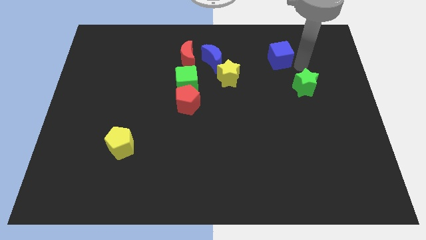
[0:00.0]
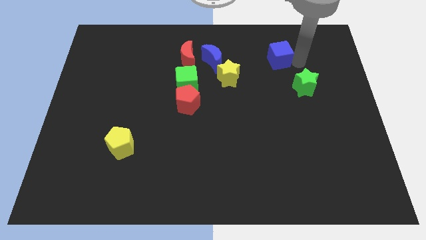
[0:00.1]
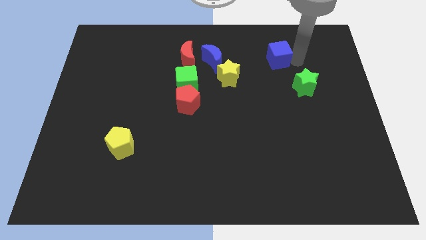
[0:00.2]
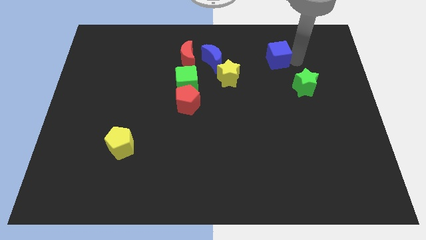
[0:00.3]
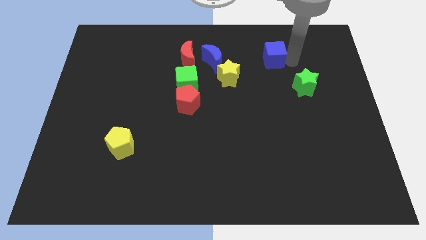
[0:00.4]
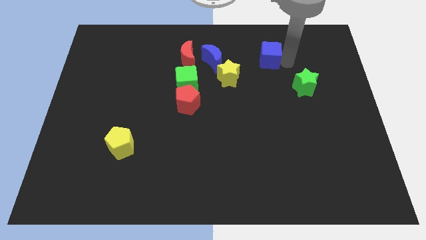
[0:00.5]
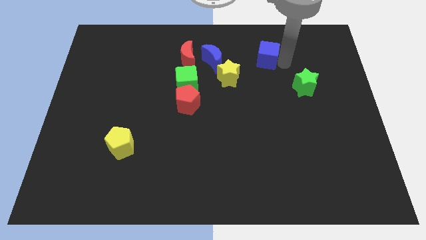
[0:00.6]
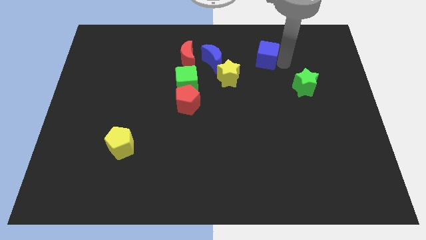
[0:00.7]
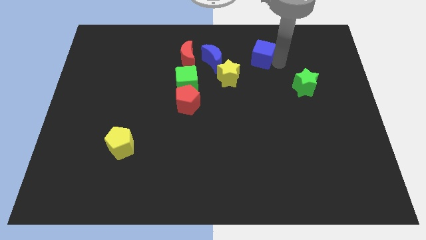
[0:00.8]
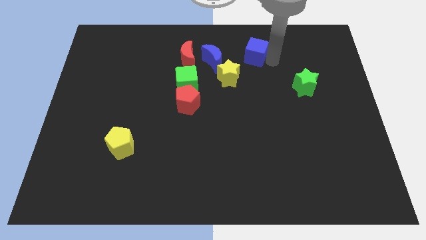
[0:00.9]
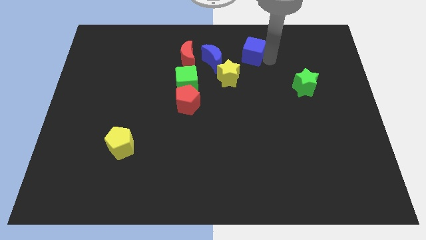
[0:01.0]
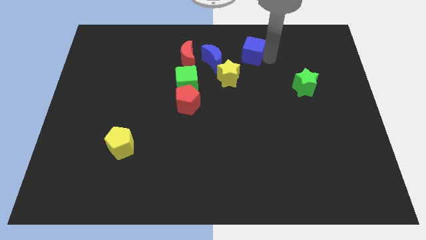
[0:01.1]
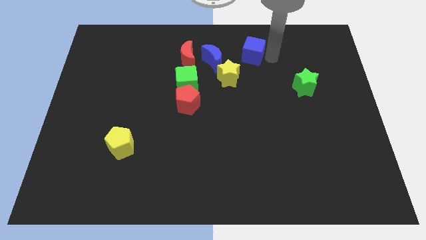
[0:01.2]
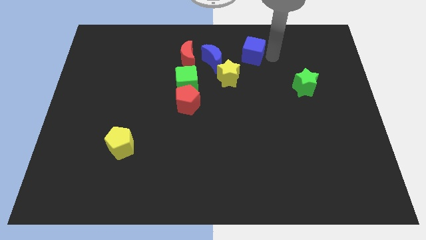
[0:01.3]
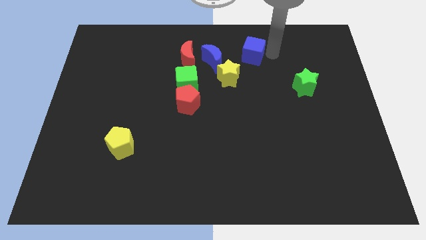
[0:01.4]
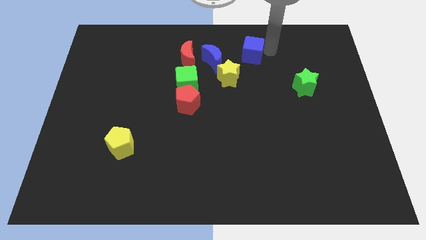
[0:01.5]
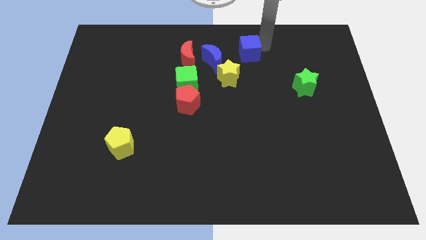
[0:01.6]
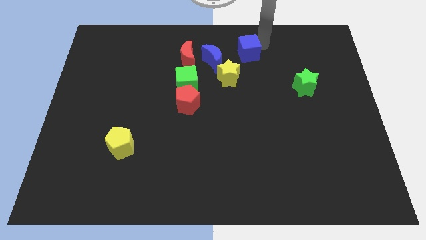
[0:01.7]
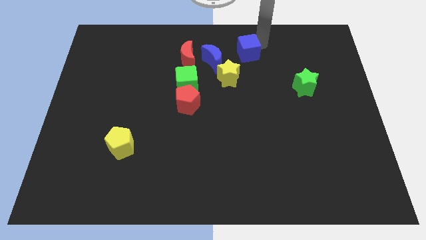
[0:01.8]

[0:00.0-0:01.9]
push the blue cube top middle side of the board

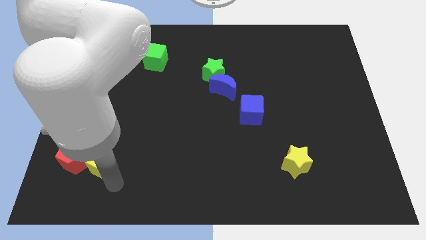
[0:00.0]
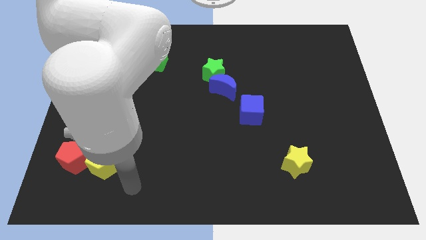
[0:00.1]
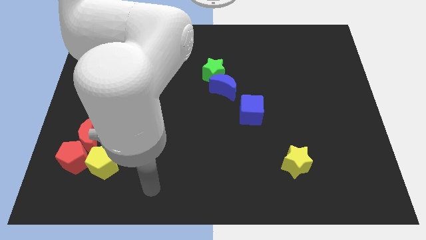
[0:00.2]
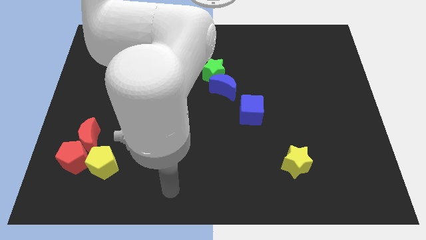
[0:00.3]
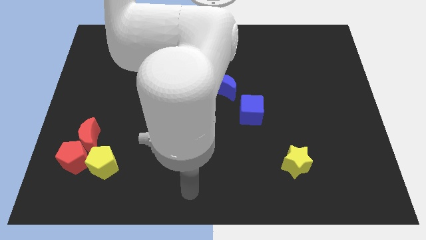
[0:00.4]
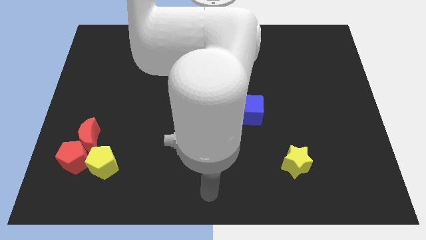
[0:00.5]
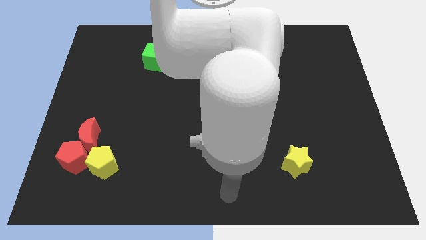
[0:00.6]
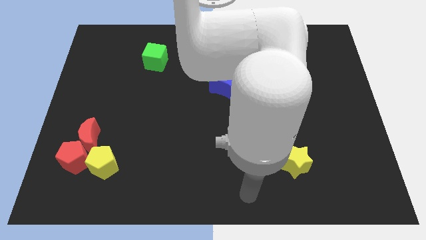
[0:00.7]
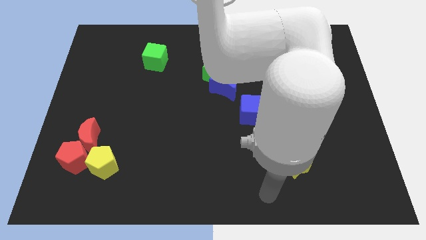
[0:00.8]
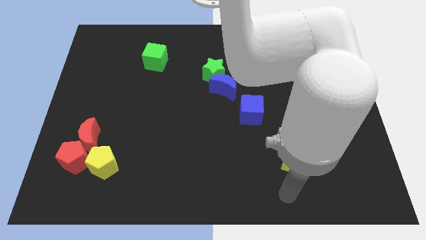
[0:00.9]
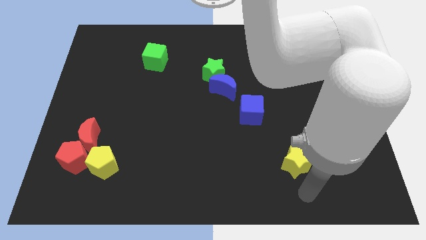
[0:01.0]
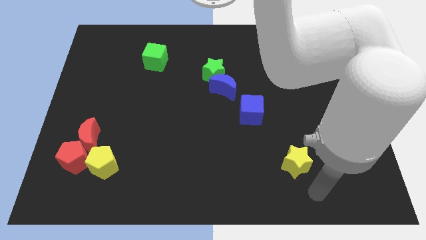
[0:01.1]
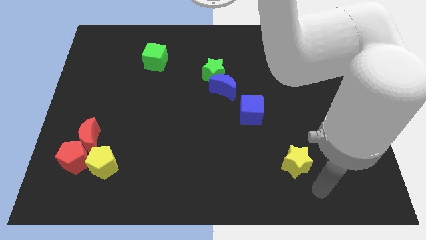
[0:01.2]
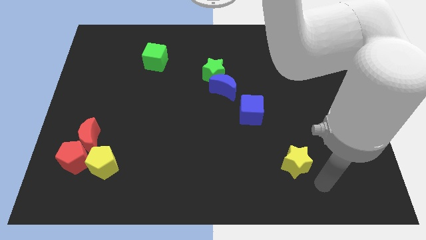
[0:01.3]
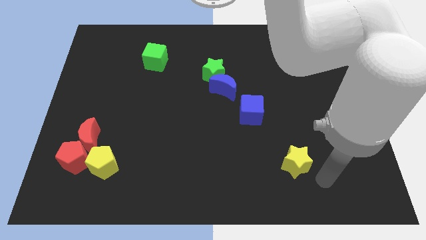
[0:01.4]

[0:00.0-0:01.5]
move the arm near the yellow star

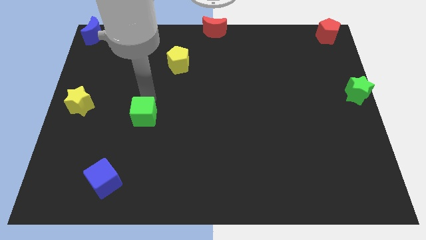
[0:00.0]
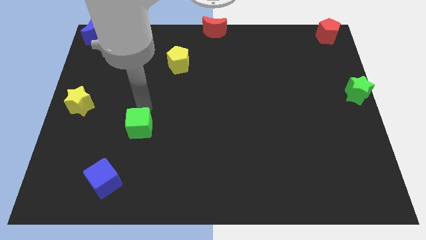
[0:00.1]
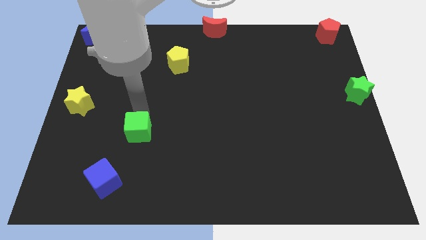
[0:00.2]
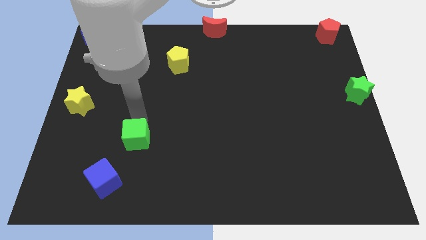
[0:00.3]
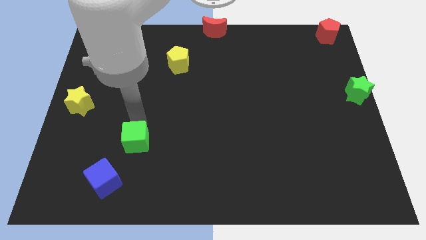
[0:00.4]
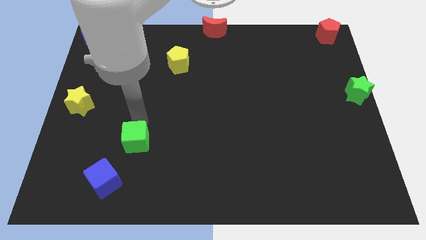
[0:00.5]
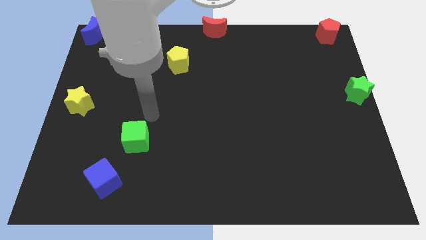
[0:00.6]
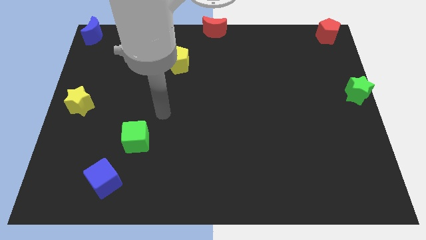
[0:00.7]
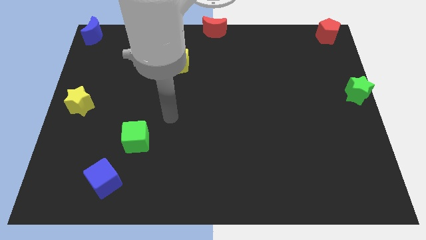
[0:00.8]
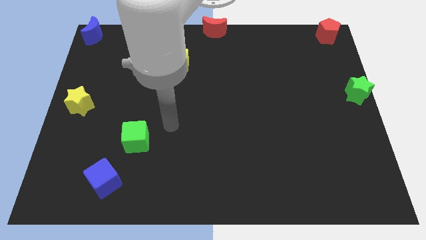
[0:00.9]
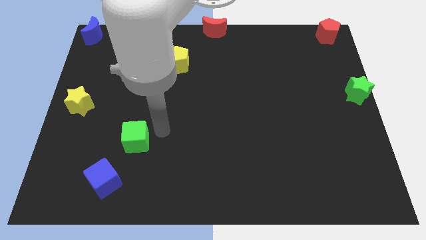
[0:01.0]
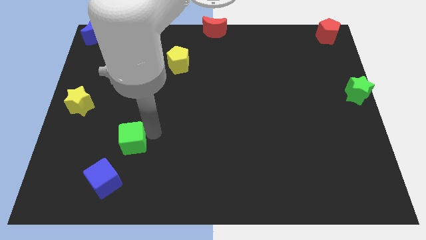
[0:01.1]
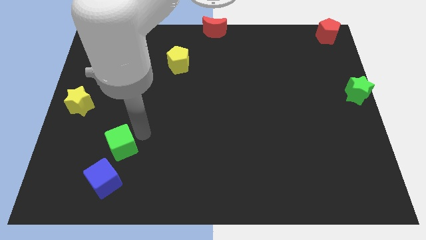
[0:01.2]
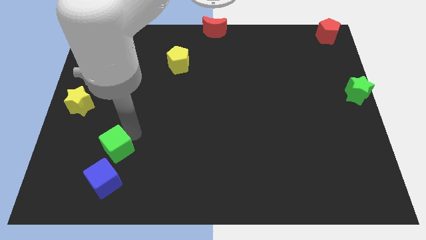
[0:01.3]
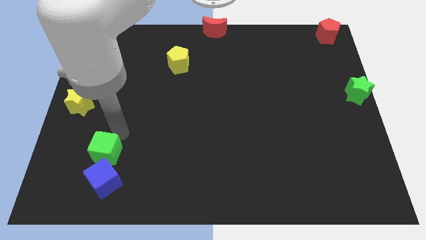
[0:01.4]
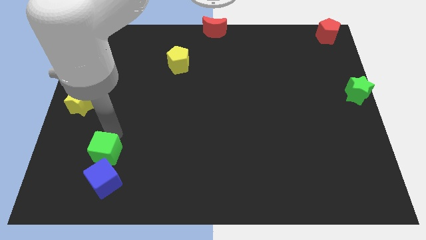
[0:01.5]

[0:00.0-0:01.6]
move the green cube to the top side of the blue cube

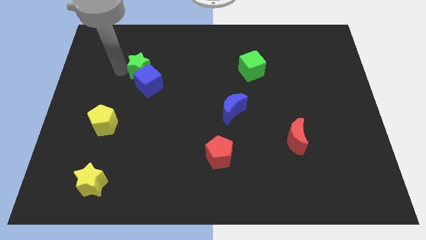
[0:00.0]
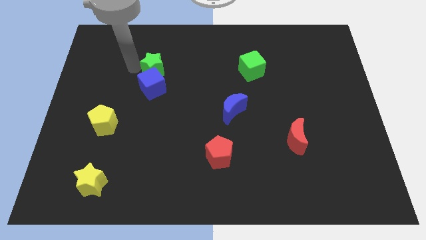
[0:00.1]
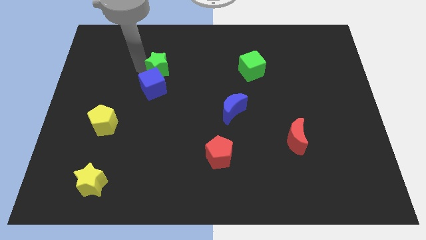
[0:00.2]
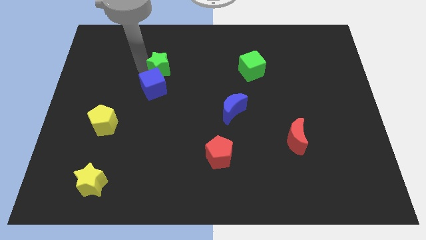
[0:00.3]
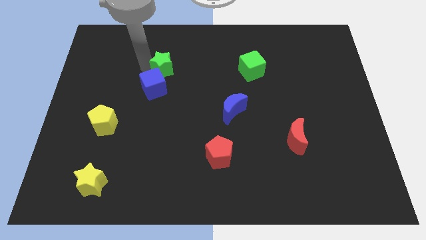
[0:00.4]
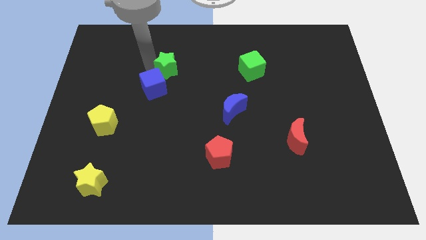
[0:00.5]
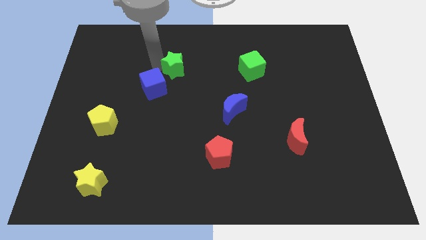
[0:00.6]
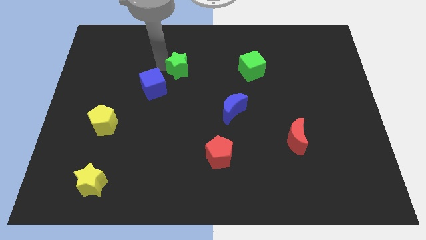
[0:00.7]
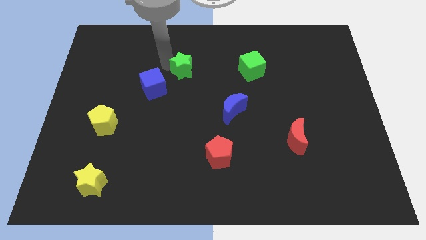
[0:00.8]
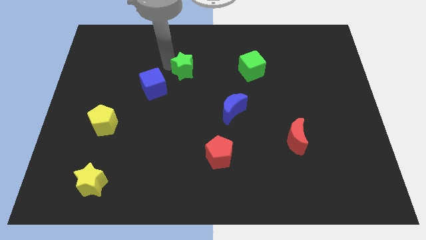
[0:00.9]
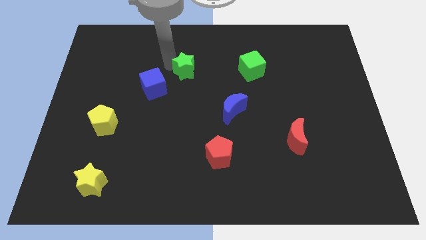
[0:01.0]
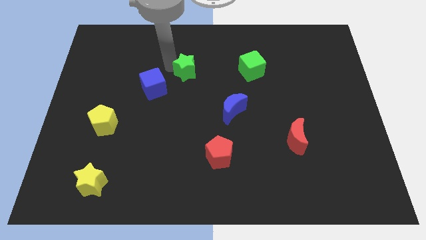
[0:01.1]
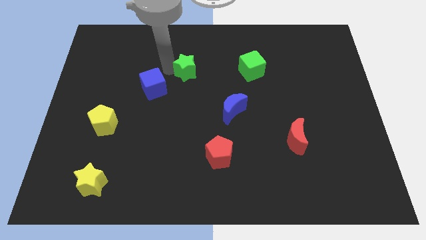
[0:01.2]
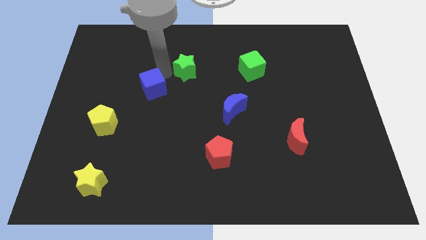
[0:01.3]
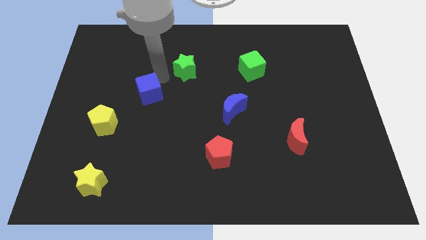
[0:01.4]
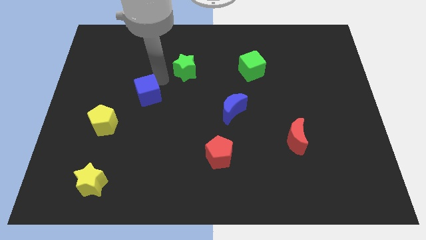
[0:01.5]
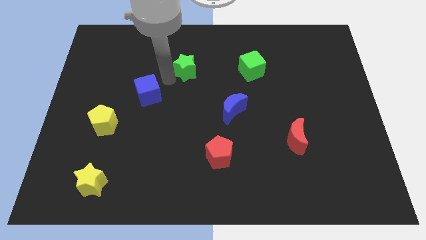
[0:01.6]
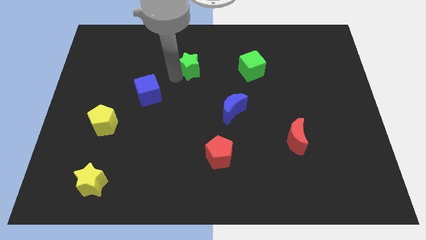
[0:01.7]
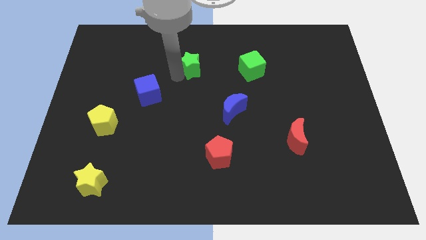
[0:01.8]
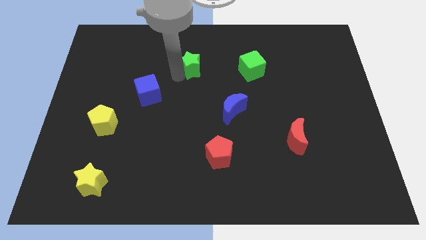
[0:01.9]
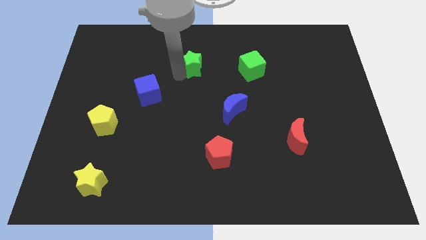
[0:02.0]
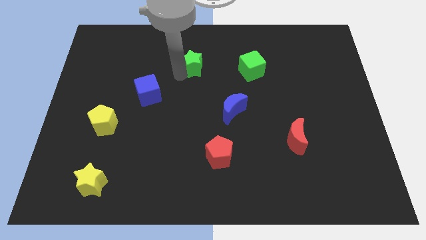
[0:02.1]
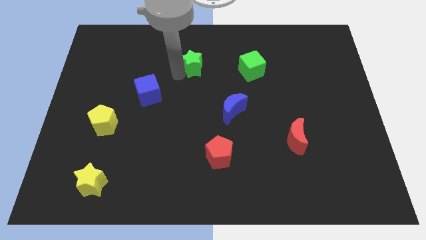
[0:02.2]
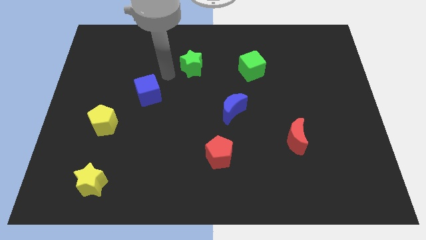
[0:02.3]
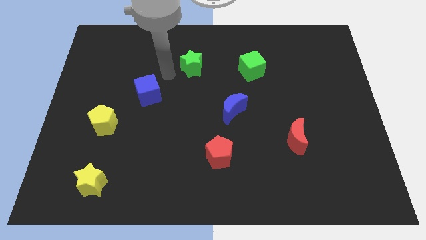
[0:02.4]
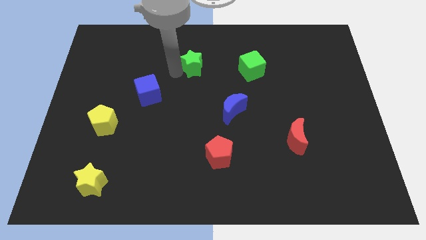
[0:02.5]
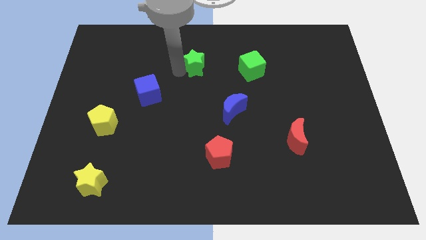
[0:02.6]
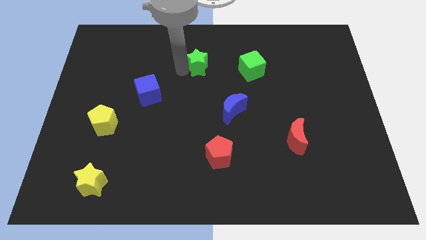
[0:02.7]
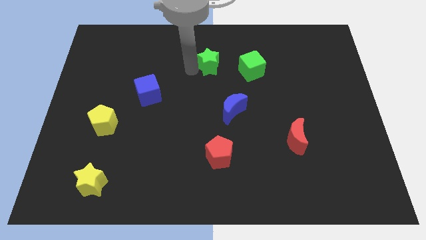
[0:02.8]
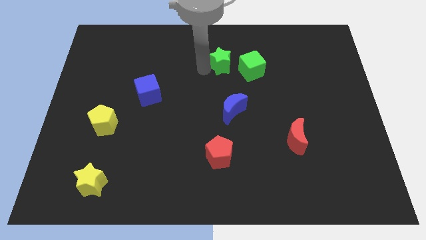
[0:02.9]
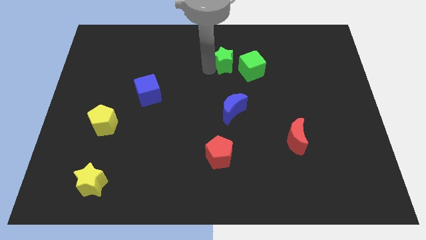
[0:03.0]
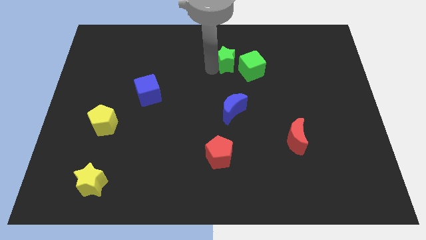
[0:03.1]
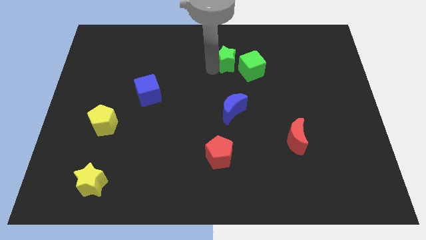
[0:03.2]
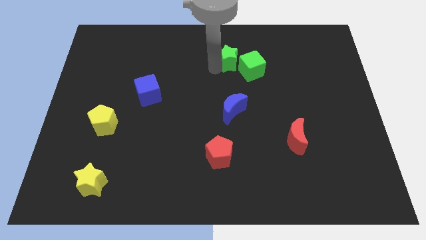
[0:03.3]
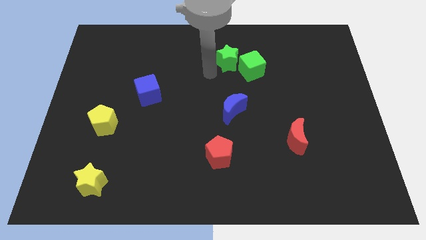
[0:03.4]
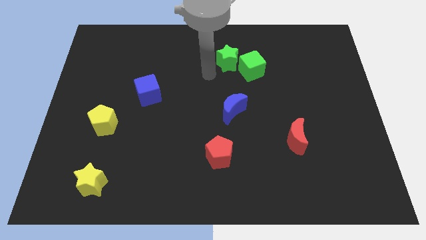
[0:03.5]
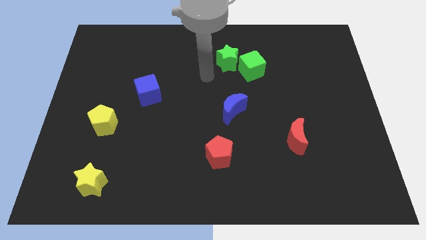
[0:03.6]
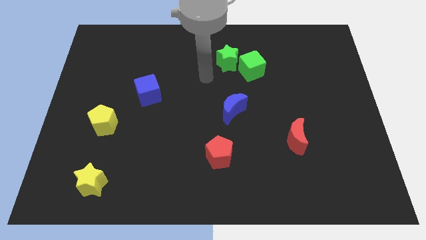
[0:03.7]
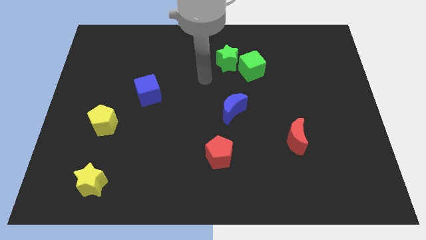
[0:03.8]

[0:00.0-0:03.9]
place the green star to the top left of the green cube
